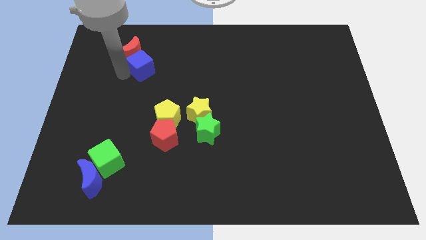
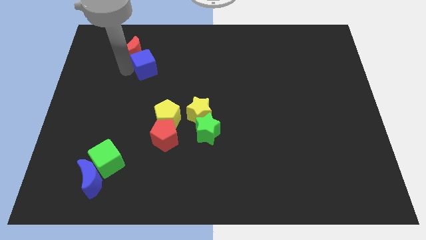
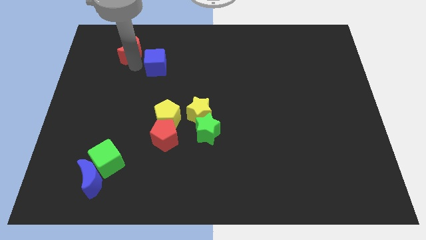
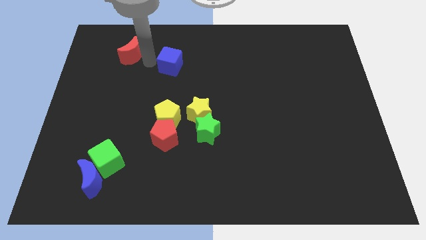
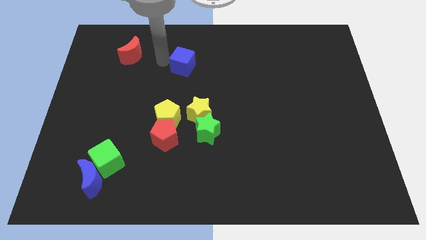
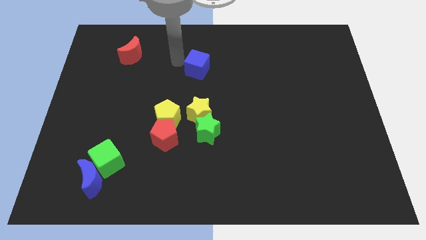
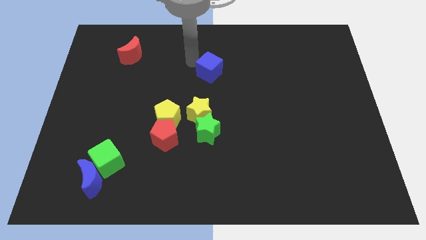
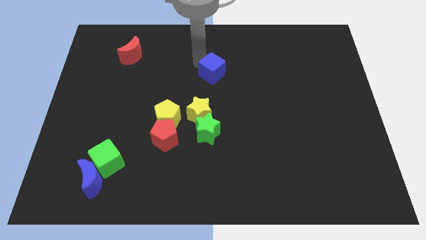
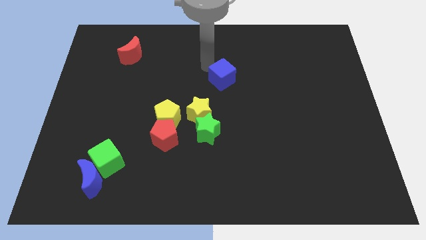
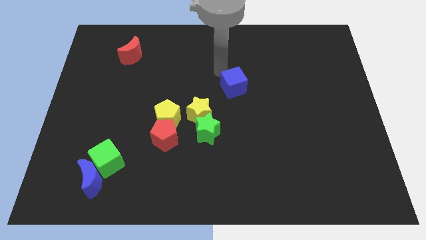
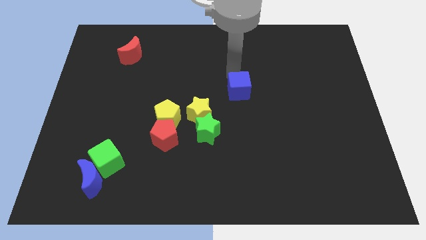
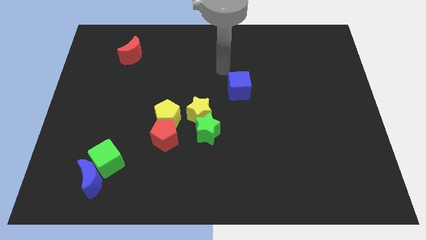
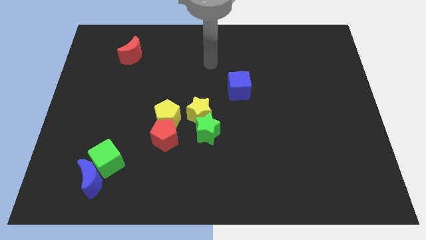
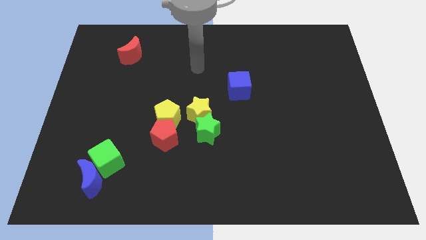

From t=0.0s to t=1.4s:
push the blue cube towards the top right of the board

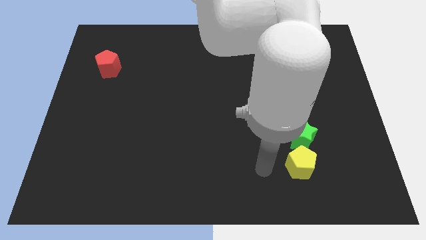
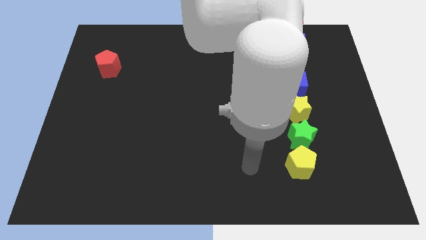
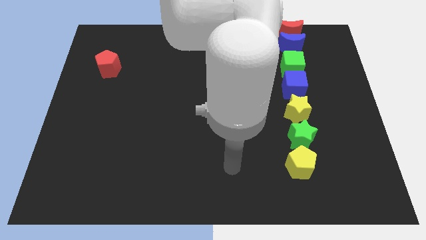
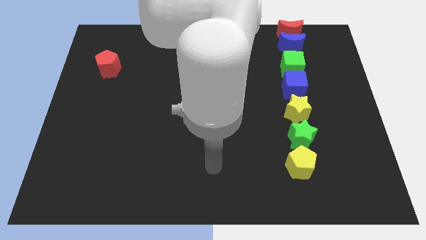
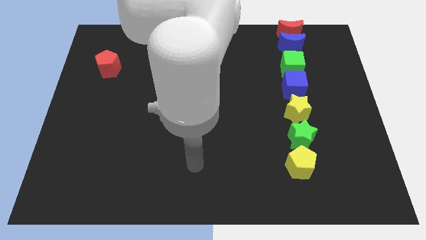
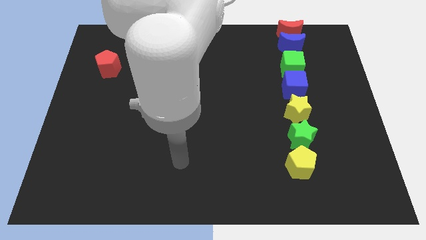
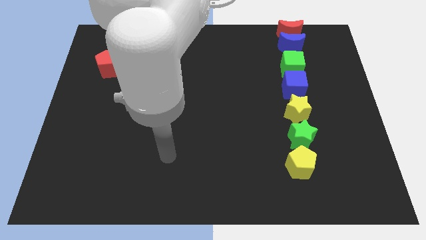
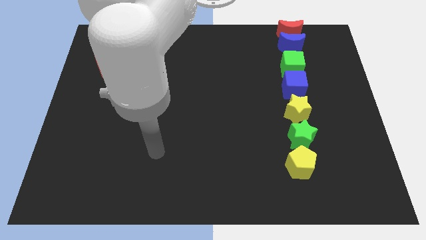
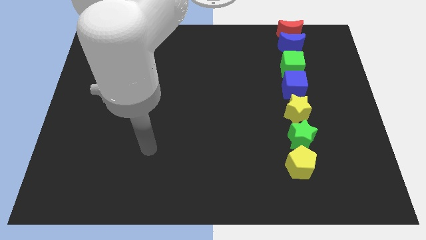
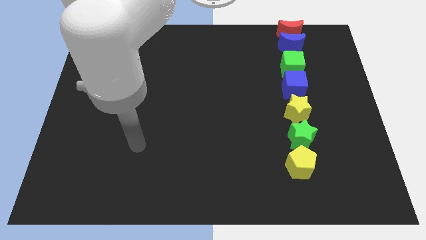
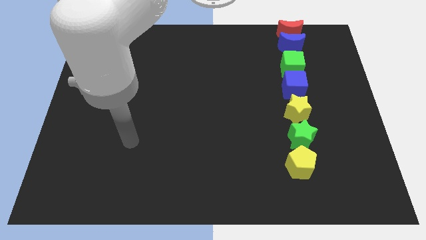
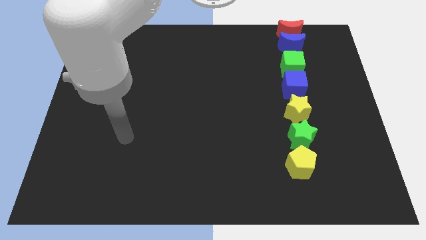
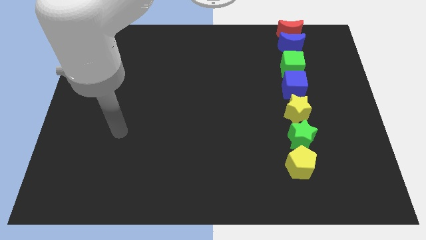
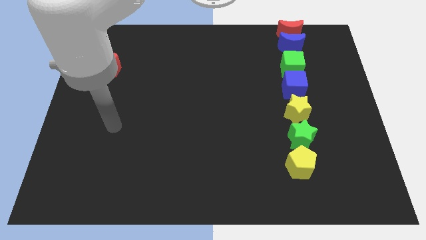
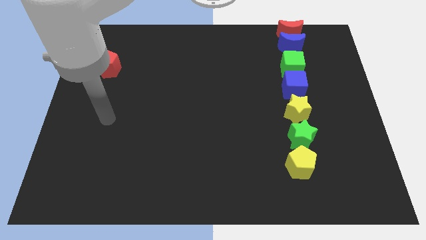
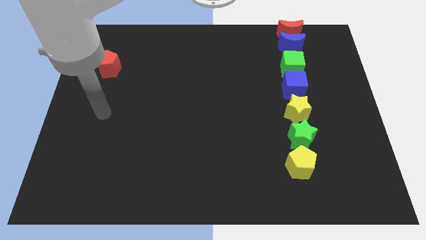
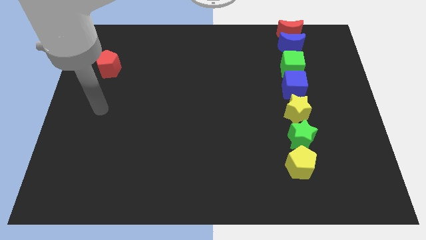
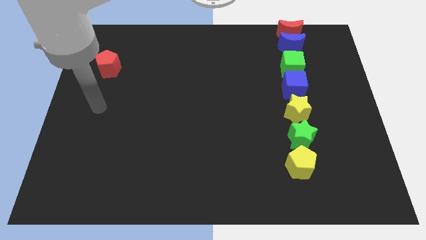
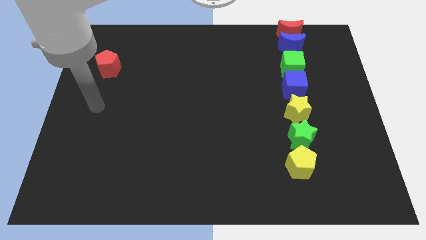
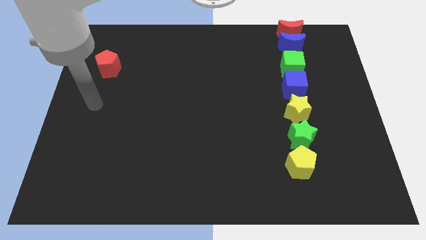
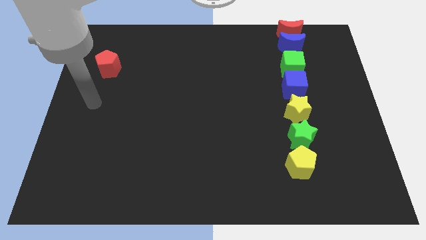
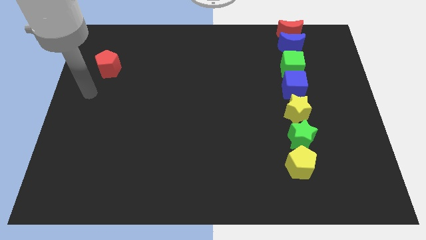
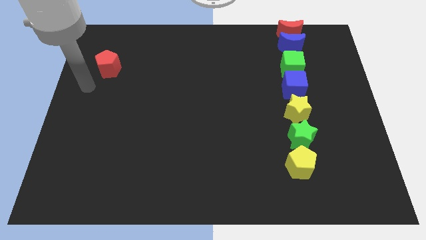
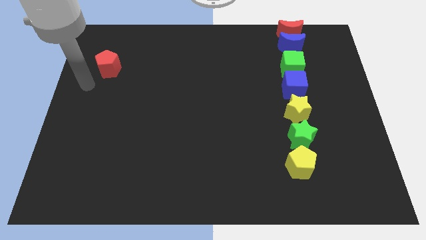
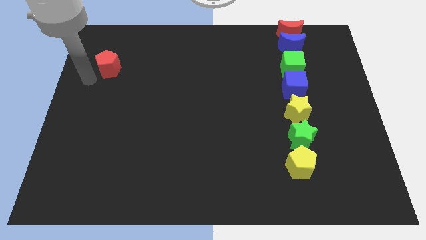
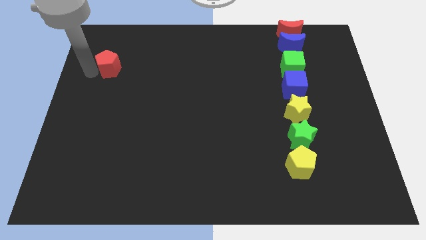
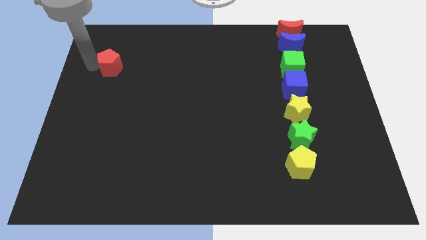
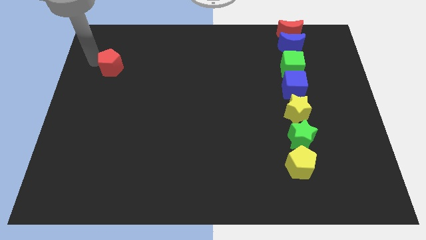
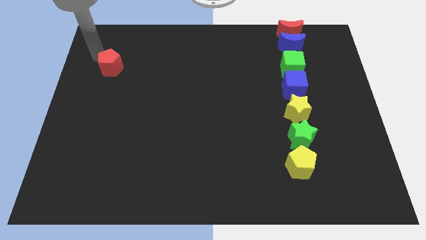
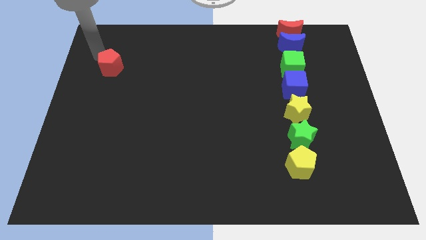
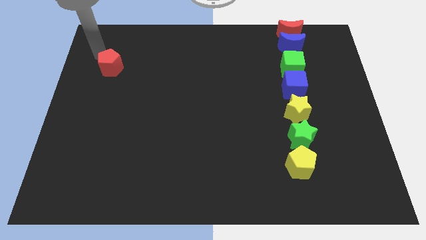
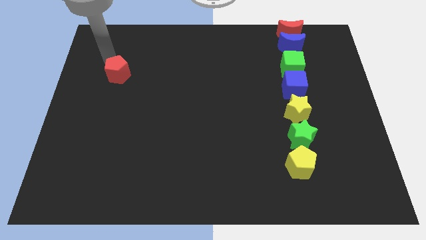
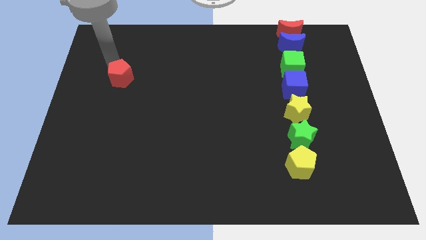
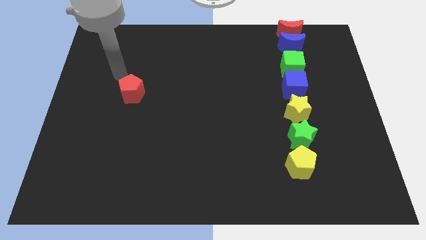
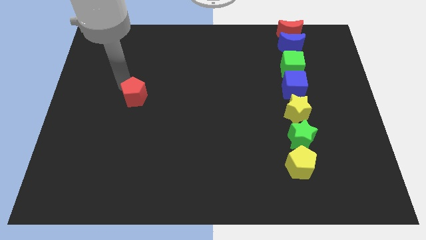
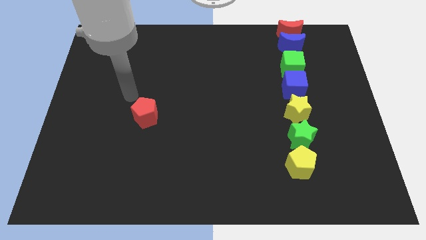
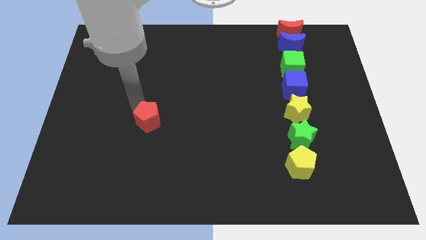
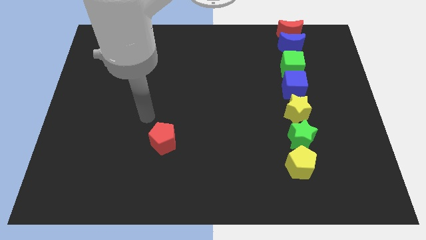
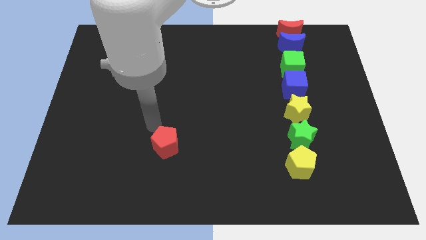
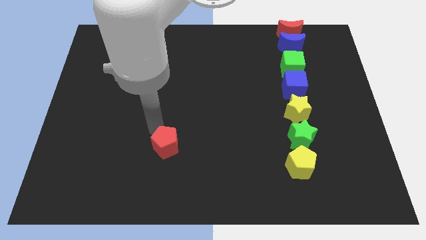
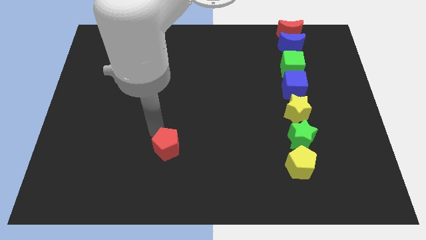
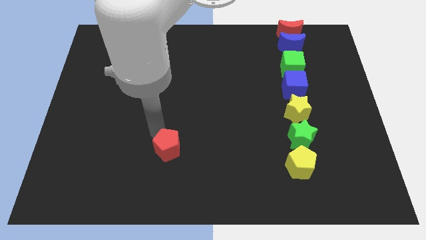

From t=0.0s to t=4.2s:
push the red pentagon towards the bottom center

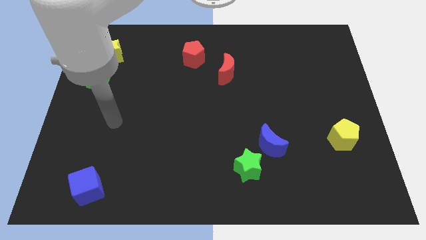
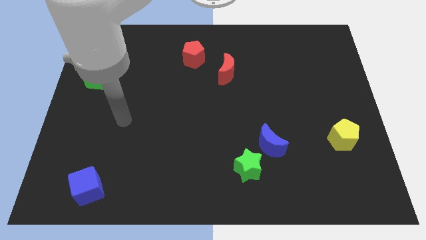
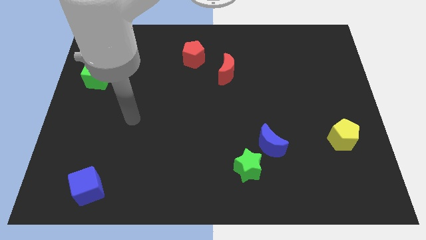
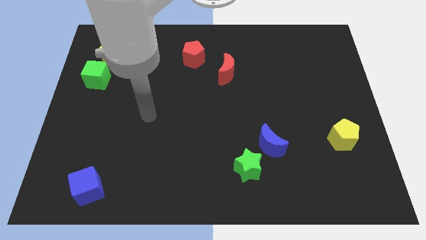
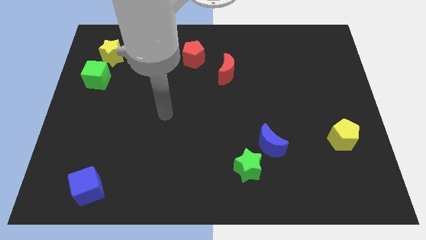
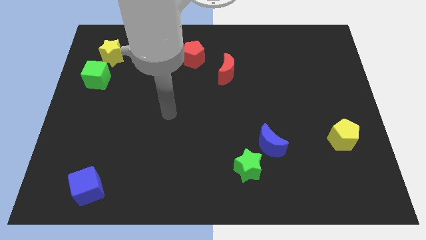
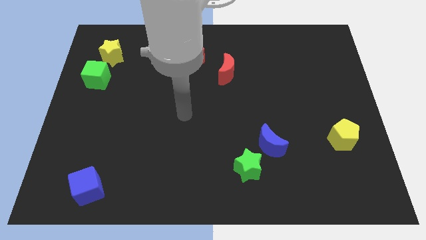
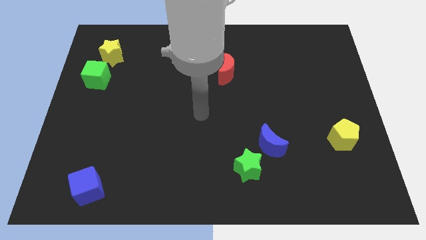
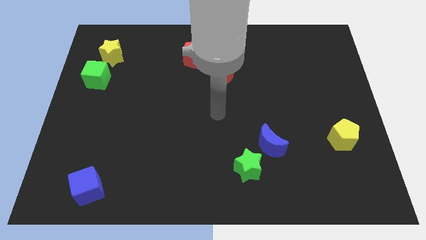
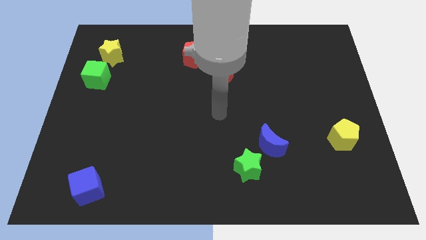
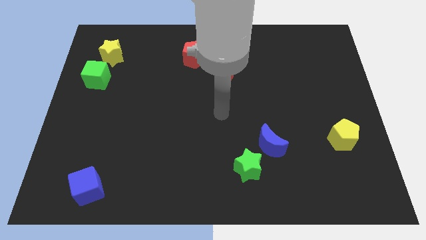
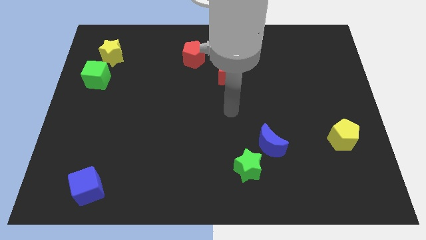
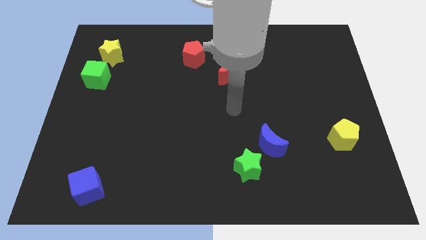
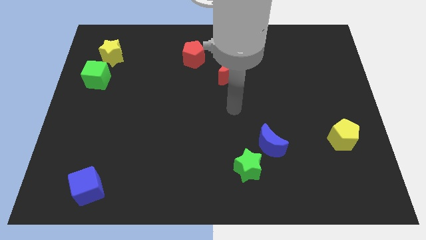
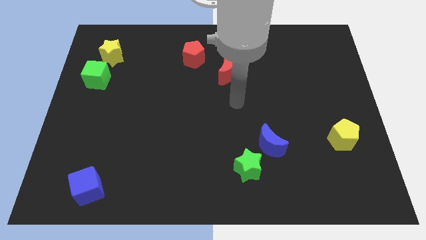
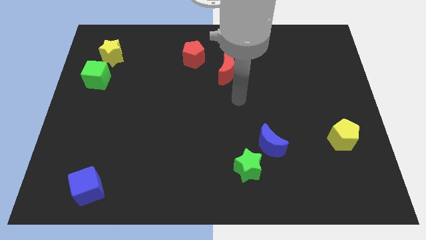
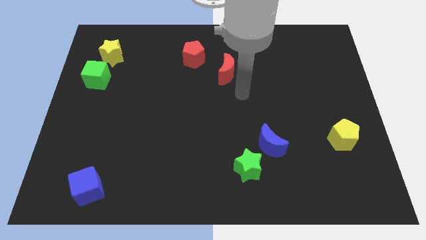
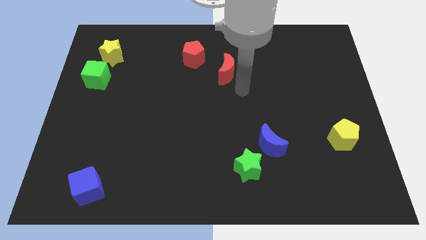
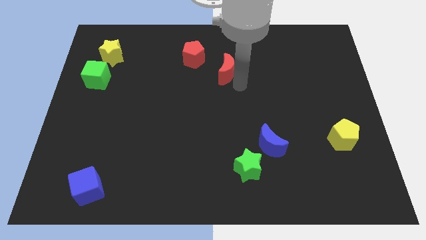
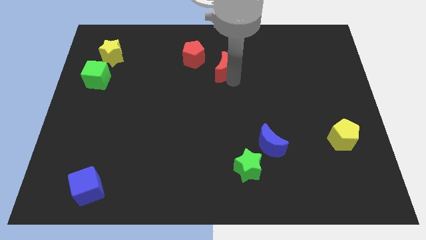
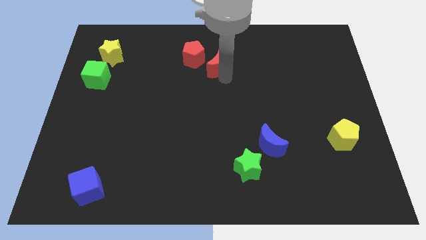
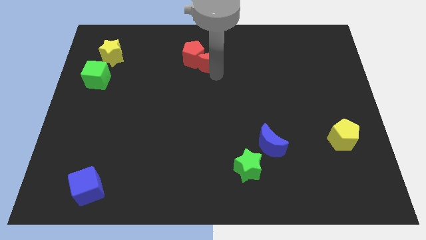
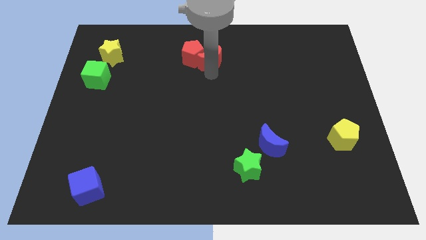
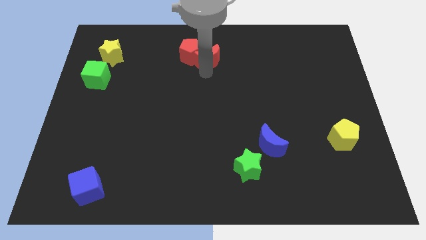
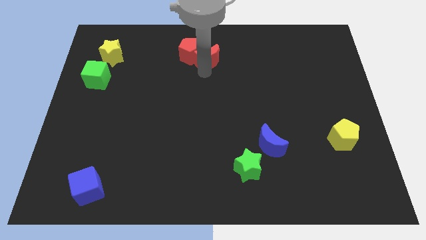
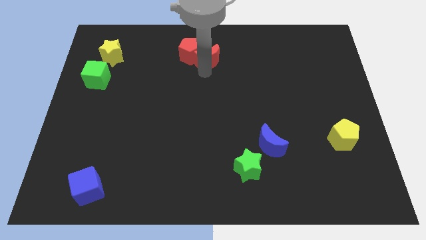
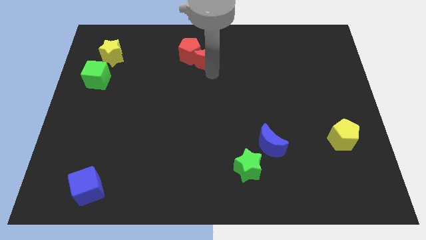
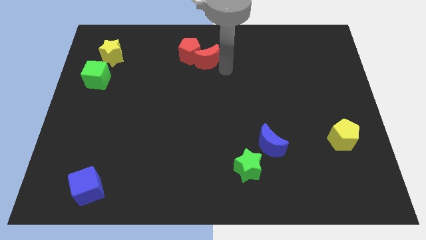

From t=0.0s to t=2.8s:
push the red pentagon with the help of red crescent to the top center of the board

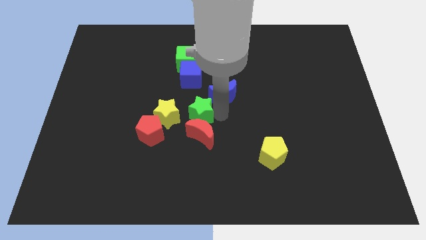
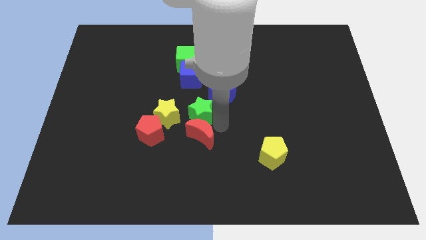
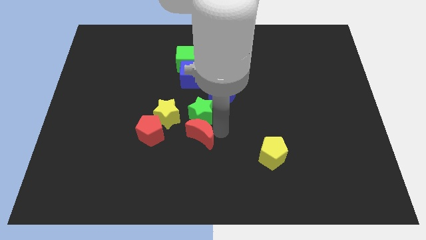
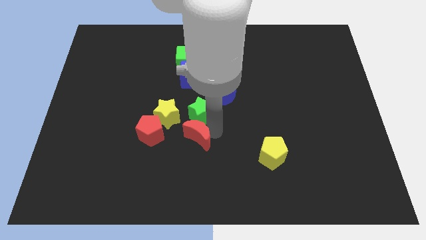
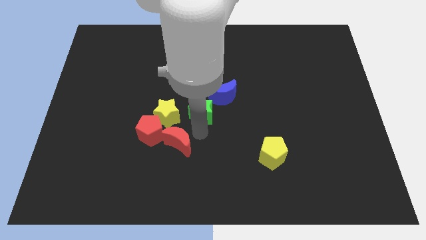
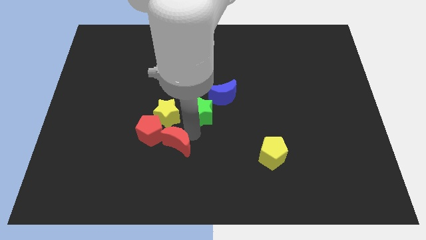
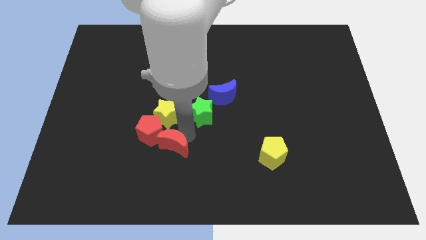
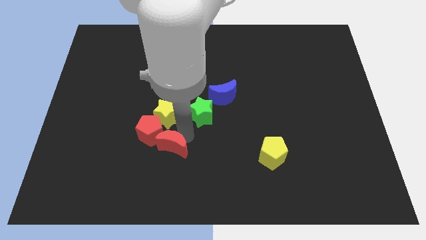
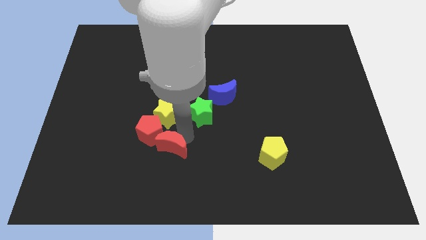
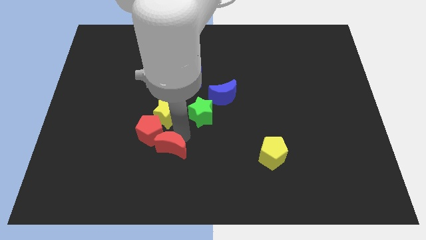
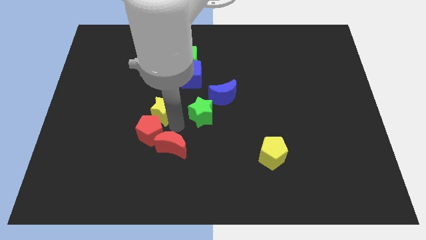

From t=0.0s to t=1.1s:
separate the green star and the red crescent
